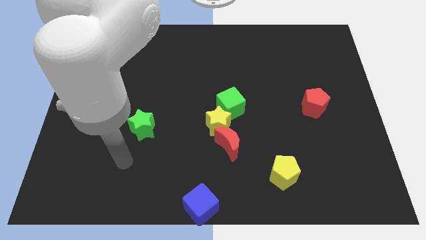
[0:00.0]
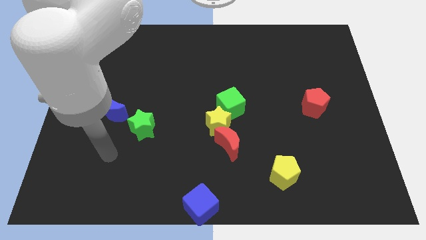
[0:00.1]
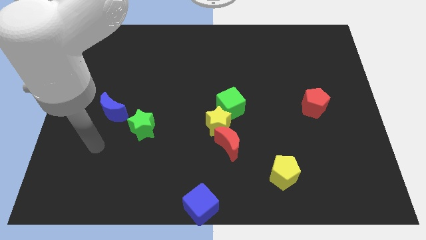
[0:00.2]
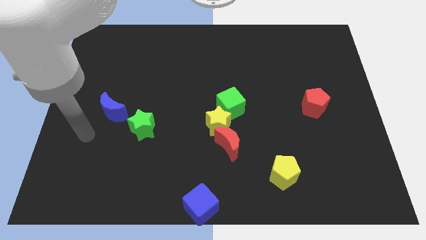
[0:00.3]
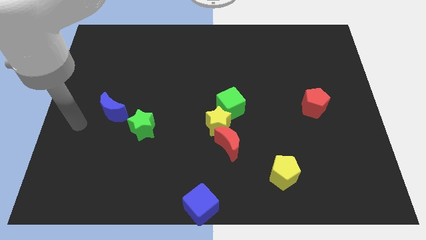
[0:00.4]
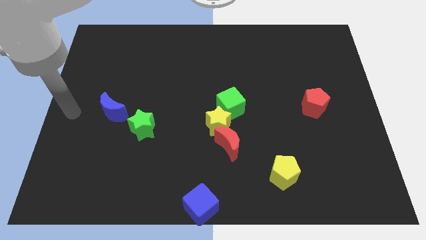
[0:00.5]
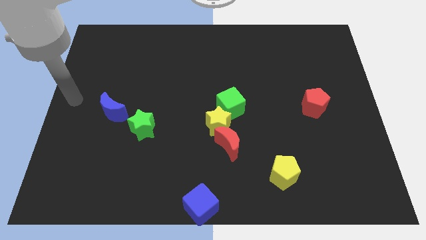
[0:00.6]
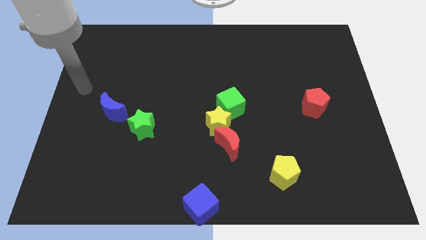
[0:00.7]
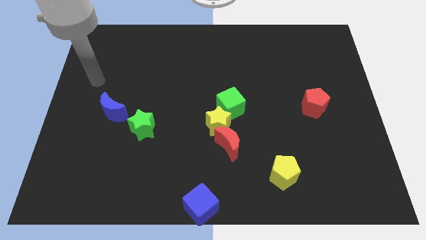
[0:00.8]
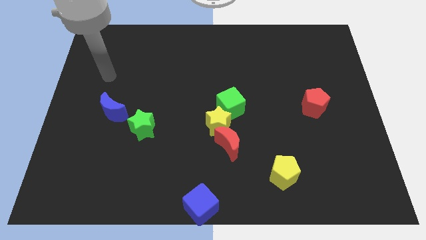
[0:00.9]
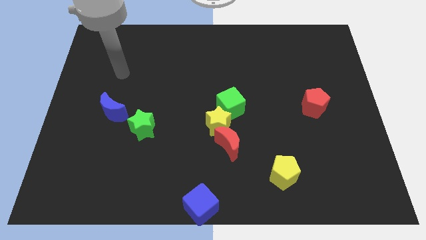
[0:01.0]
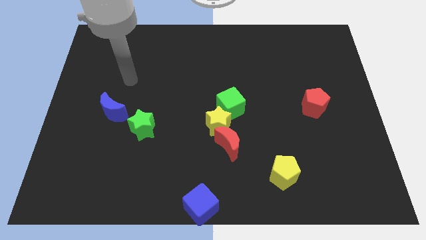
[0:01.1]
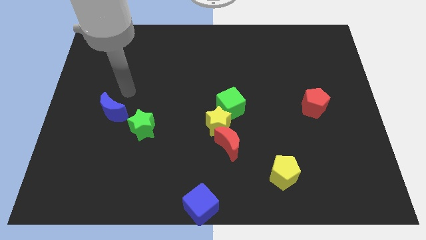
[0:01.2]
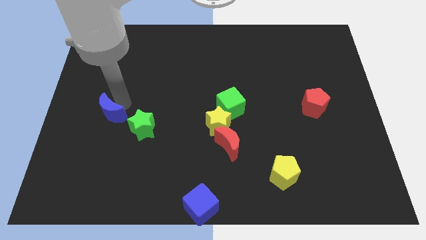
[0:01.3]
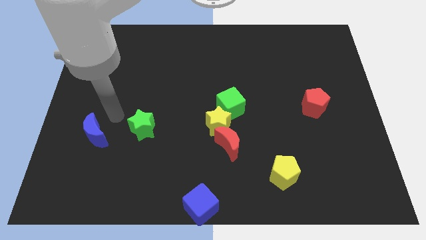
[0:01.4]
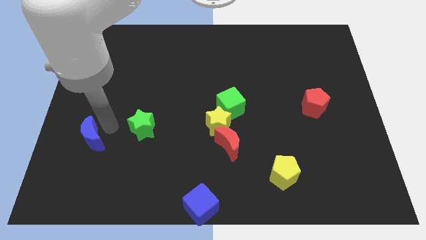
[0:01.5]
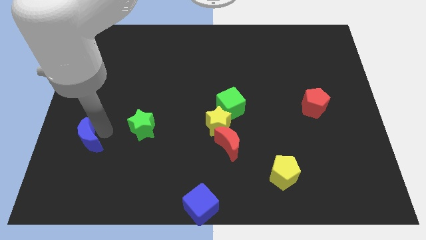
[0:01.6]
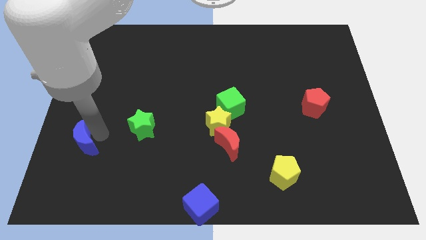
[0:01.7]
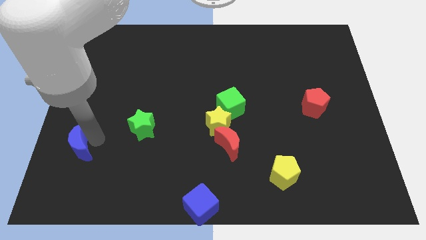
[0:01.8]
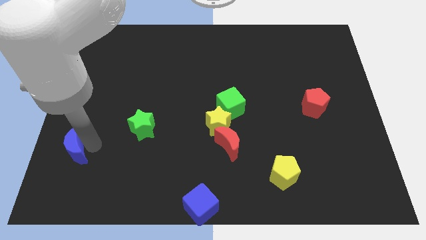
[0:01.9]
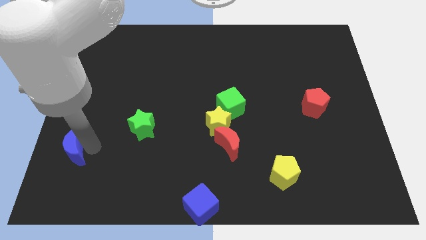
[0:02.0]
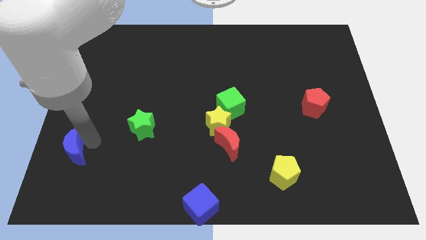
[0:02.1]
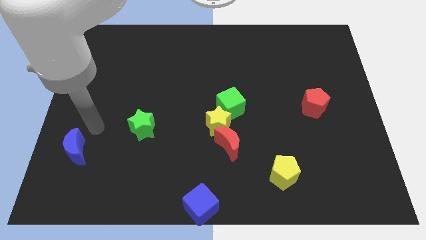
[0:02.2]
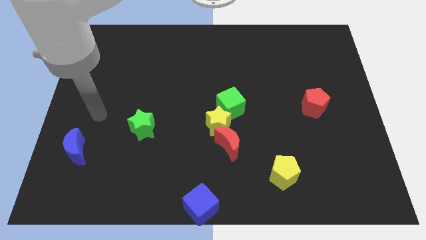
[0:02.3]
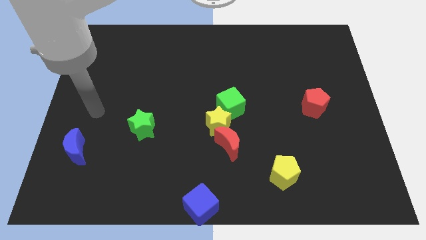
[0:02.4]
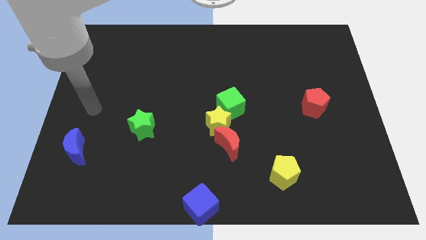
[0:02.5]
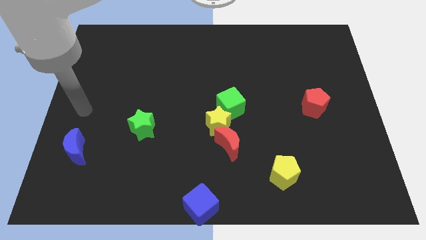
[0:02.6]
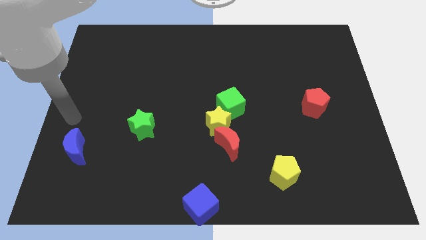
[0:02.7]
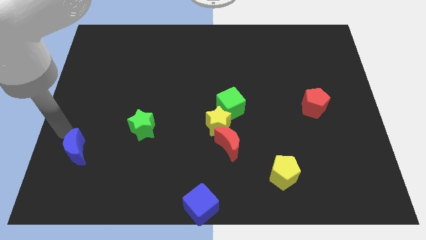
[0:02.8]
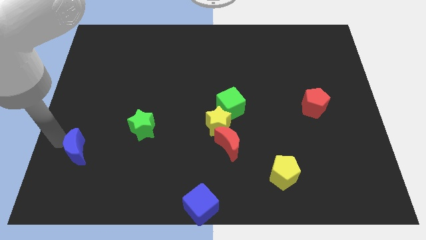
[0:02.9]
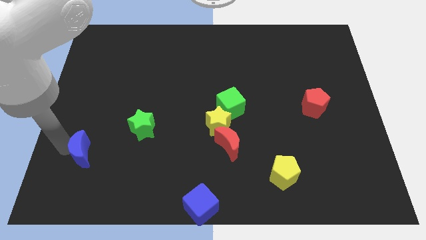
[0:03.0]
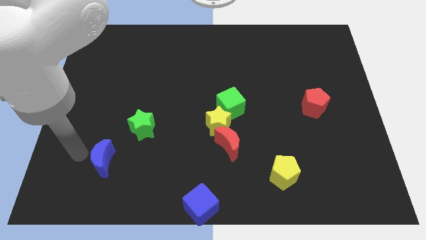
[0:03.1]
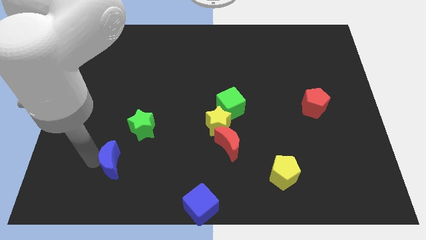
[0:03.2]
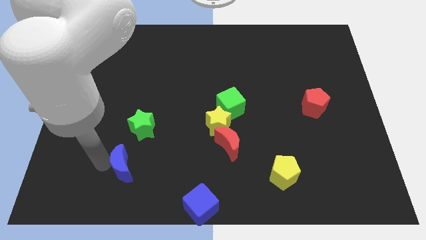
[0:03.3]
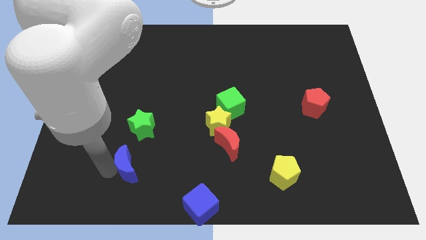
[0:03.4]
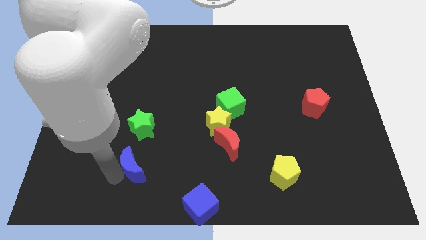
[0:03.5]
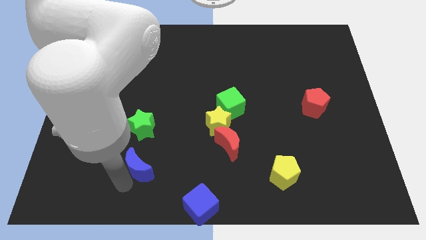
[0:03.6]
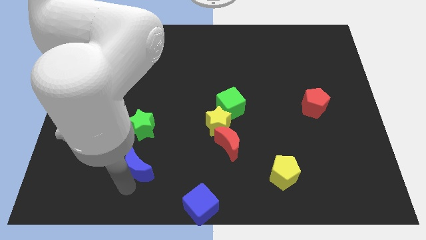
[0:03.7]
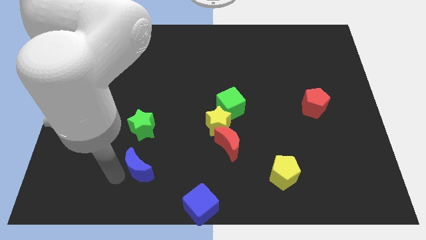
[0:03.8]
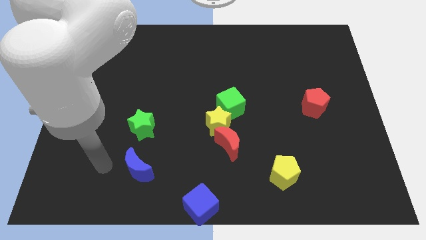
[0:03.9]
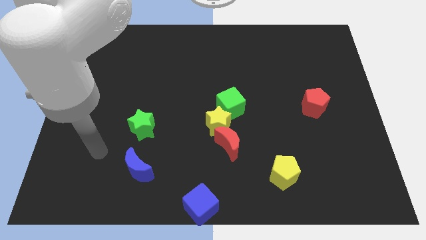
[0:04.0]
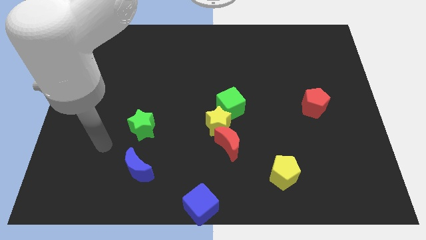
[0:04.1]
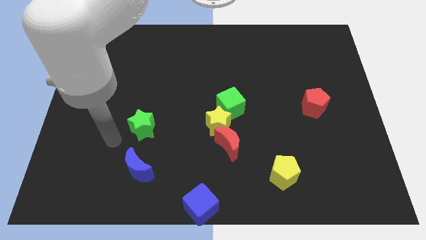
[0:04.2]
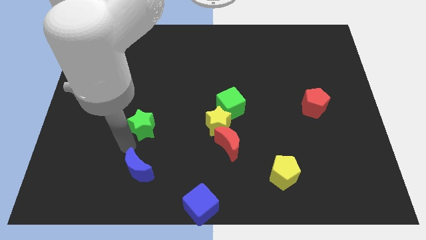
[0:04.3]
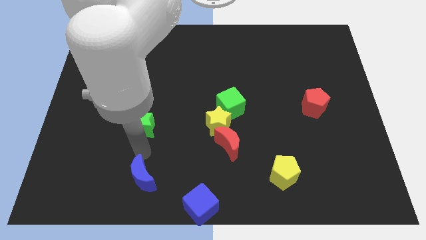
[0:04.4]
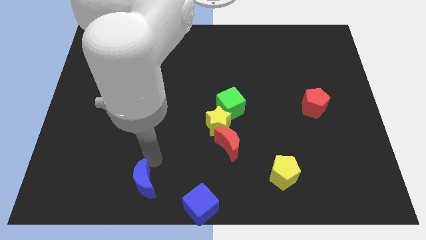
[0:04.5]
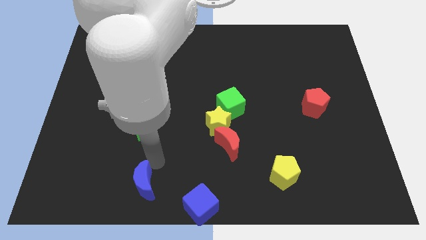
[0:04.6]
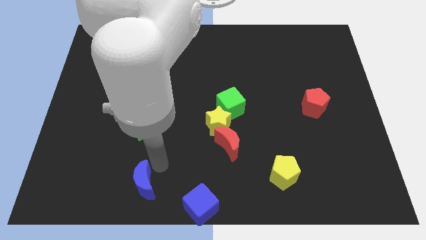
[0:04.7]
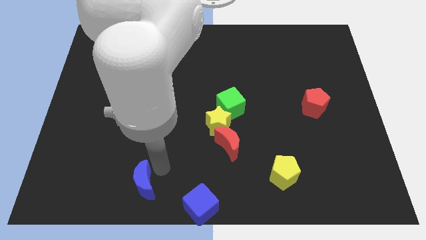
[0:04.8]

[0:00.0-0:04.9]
place the blue crescent below the green star

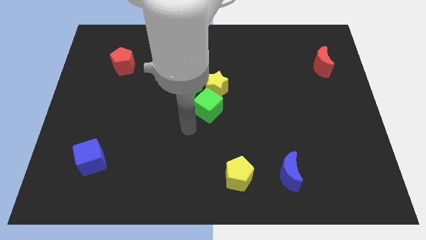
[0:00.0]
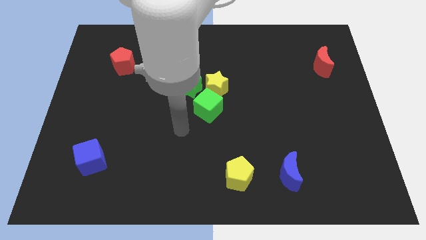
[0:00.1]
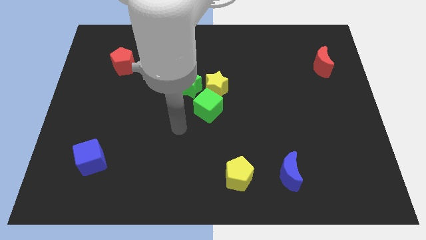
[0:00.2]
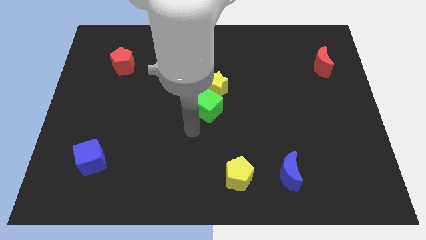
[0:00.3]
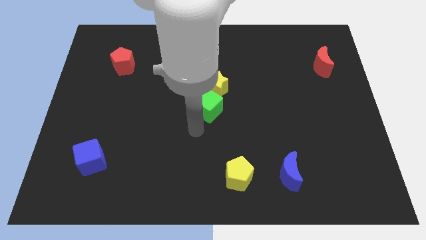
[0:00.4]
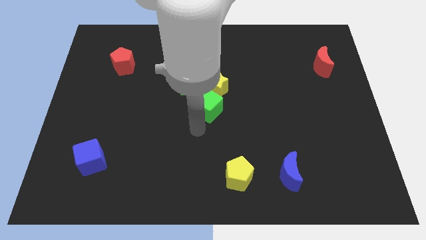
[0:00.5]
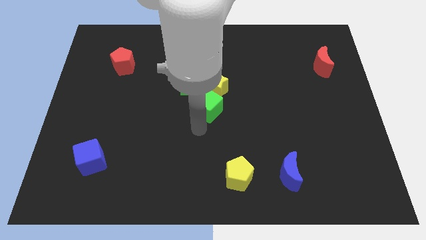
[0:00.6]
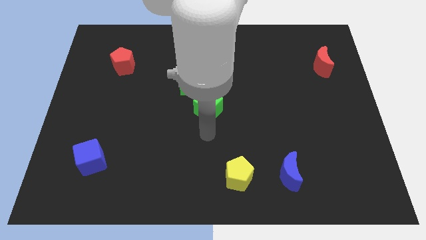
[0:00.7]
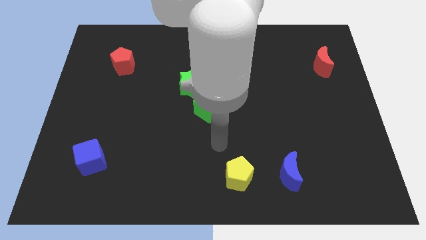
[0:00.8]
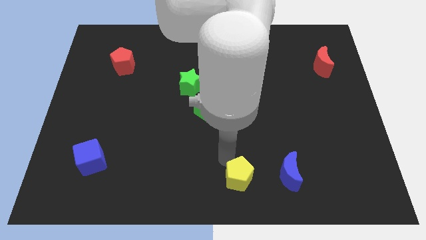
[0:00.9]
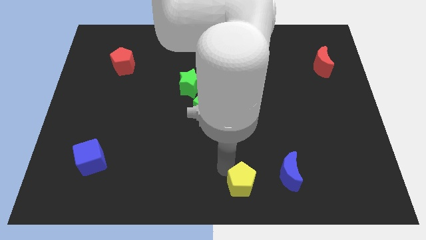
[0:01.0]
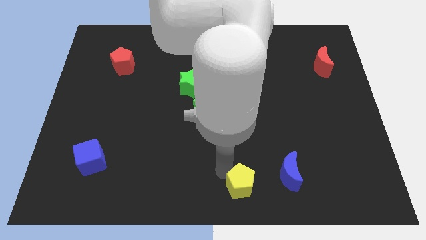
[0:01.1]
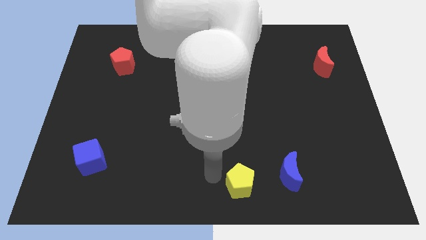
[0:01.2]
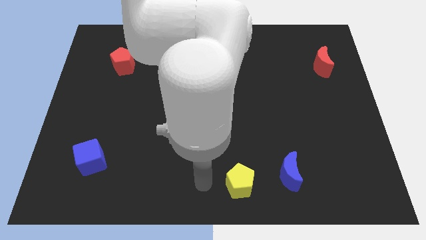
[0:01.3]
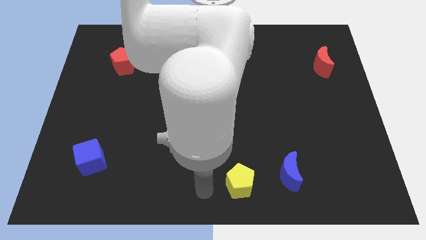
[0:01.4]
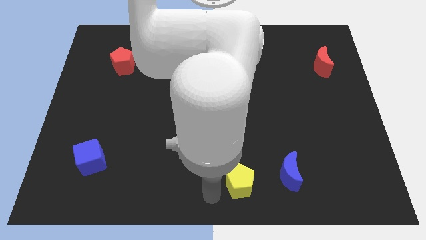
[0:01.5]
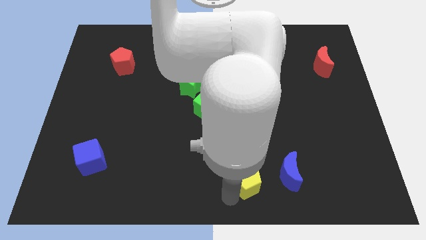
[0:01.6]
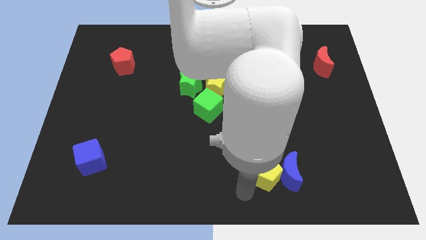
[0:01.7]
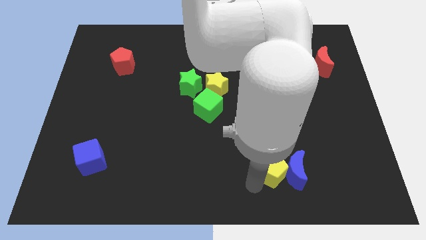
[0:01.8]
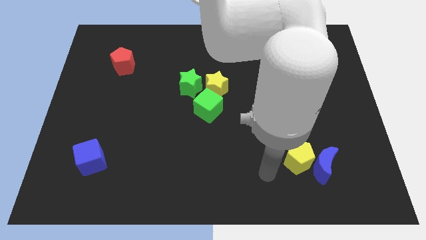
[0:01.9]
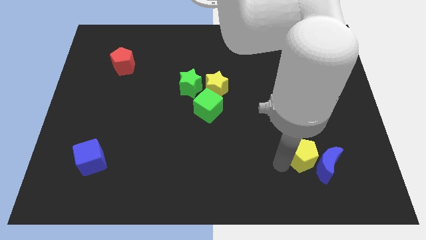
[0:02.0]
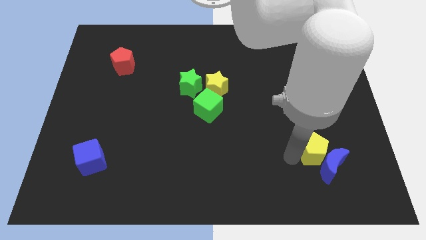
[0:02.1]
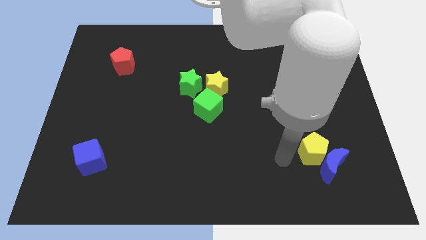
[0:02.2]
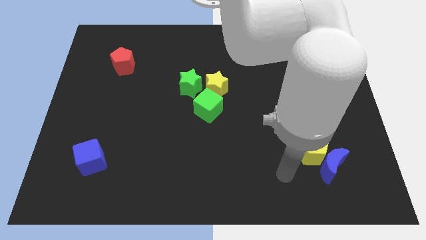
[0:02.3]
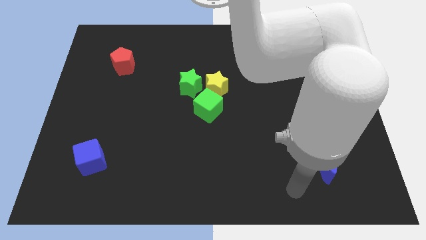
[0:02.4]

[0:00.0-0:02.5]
push the yellow pentagon into the blue moon

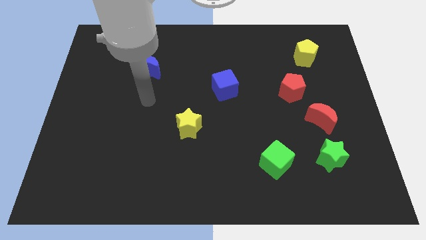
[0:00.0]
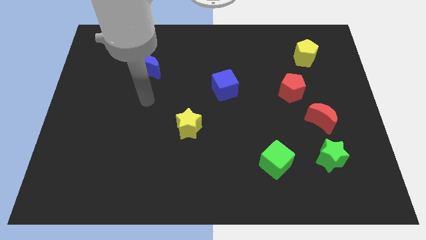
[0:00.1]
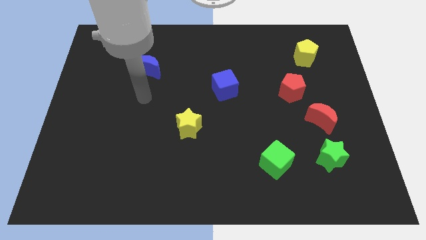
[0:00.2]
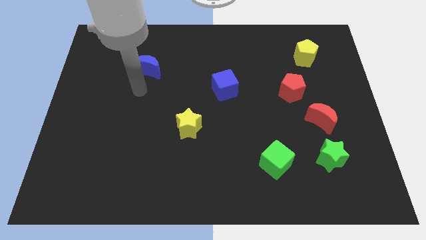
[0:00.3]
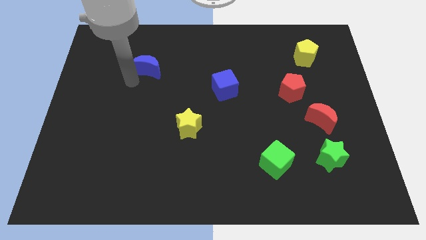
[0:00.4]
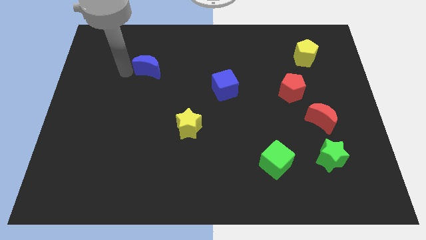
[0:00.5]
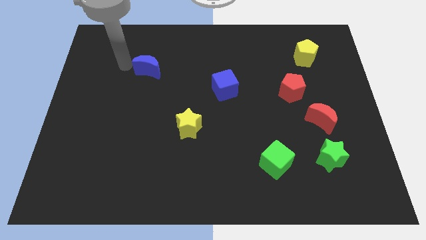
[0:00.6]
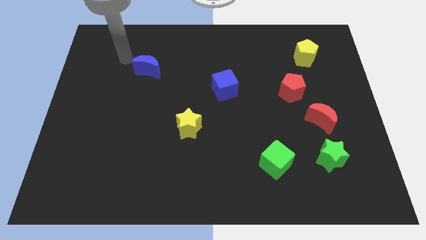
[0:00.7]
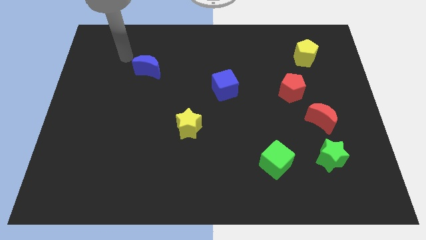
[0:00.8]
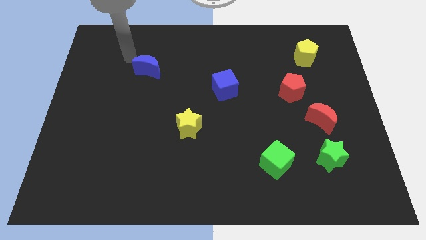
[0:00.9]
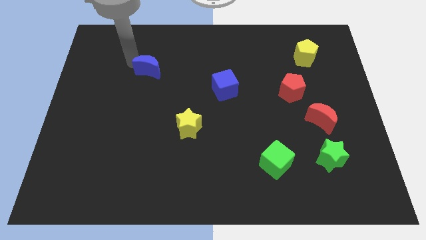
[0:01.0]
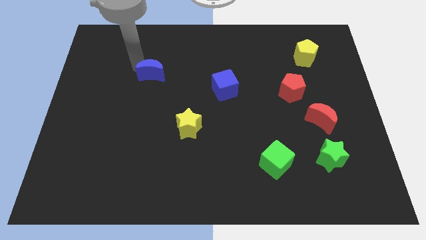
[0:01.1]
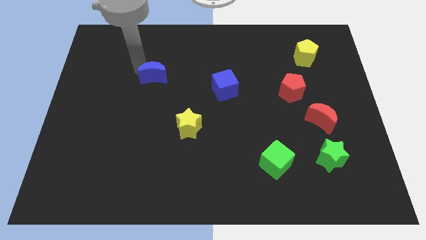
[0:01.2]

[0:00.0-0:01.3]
point your arm above blue moon

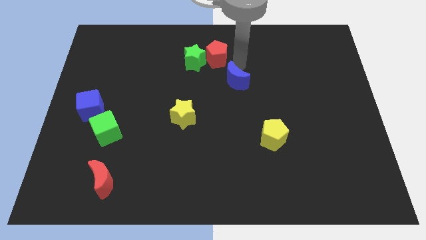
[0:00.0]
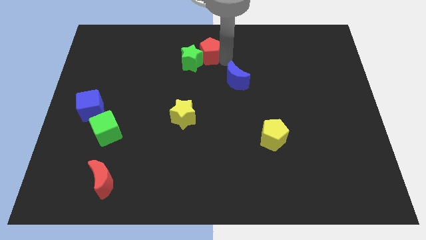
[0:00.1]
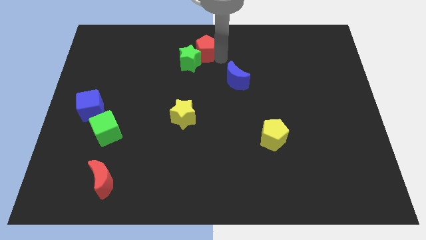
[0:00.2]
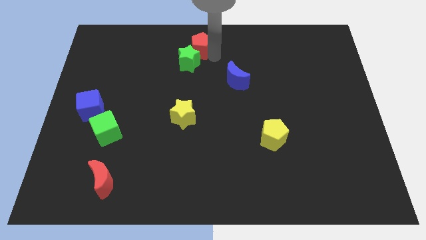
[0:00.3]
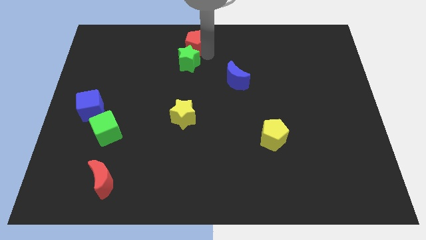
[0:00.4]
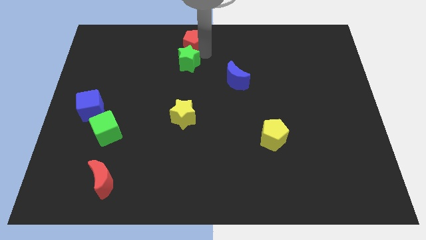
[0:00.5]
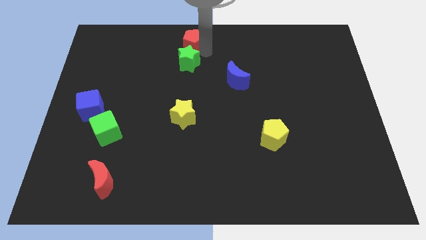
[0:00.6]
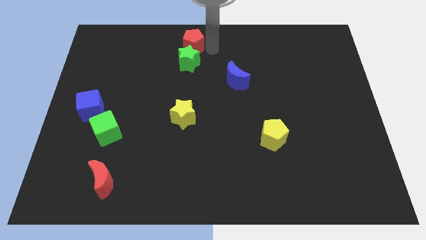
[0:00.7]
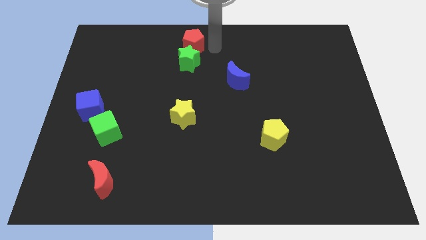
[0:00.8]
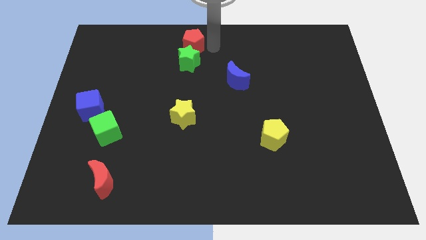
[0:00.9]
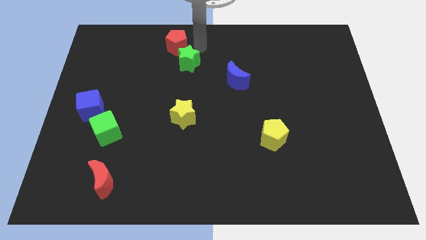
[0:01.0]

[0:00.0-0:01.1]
place the red pentagon above the green star
